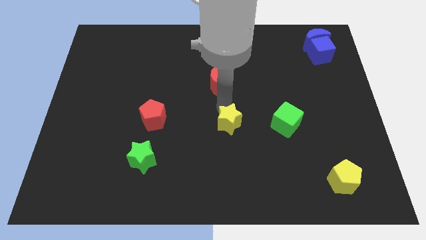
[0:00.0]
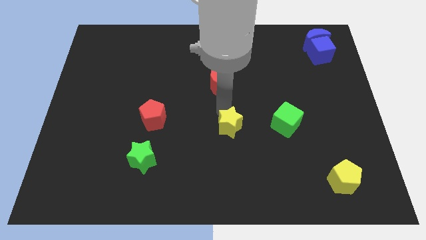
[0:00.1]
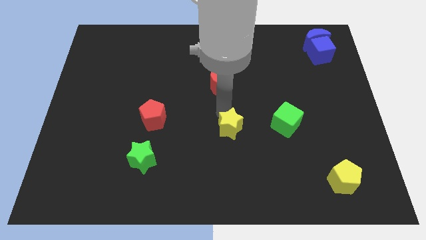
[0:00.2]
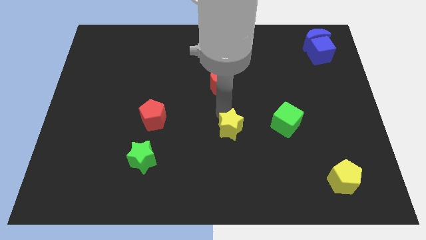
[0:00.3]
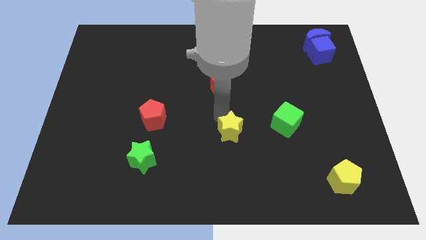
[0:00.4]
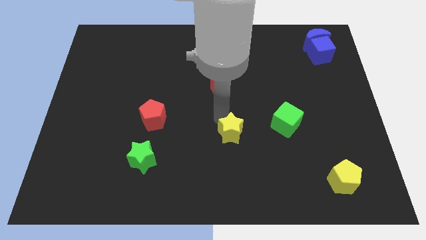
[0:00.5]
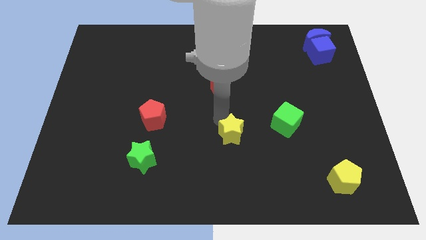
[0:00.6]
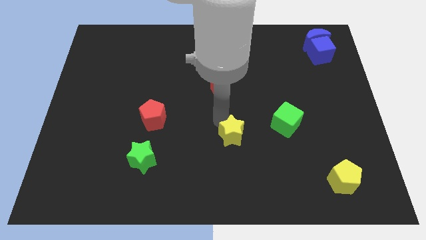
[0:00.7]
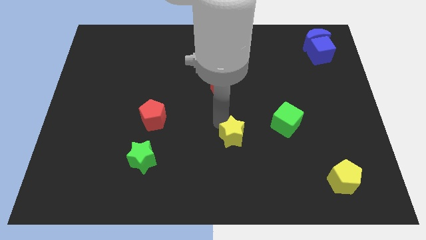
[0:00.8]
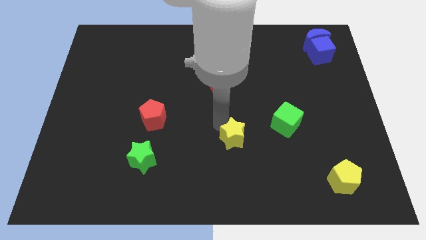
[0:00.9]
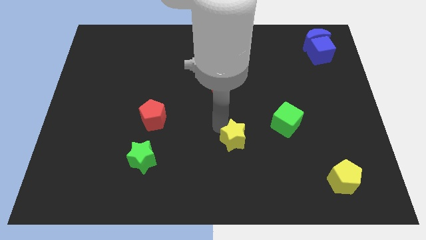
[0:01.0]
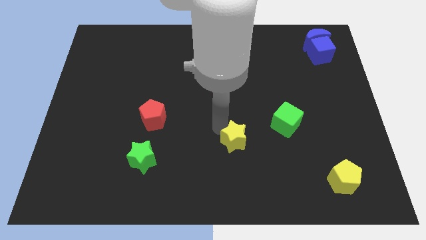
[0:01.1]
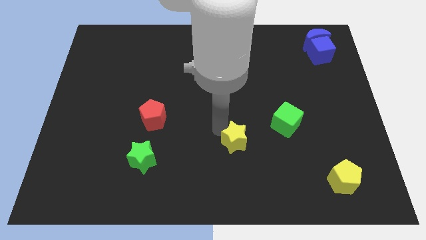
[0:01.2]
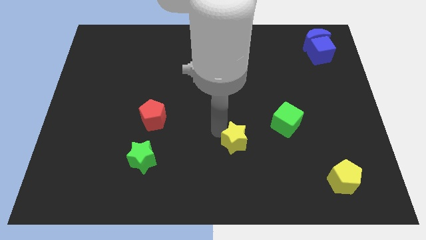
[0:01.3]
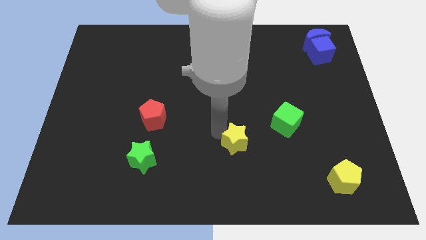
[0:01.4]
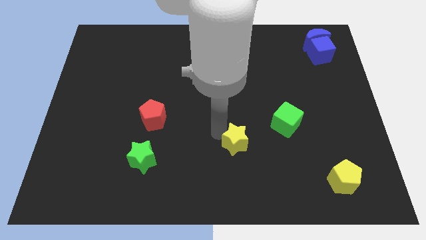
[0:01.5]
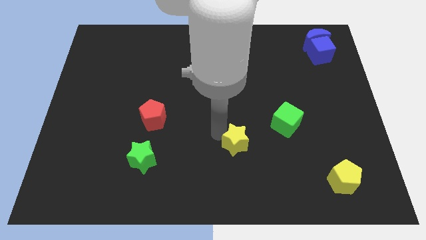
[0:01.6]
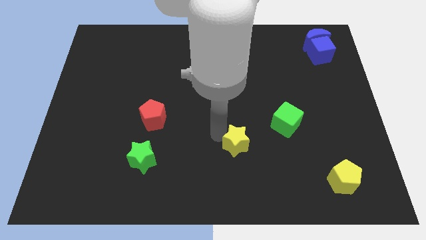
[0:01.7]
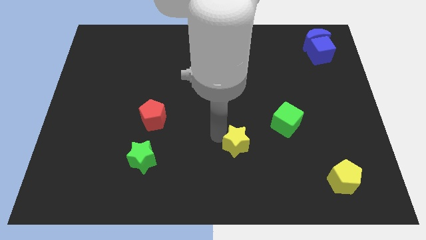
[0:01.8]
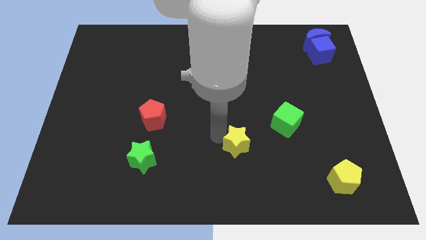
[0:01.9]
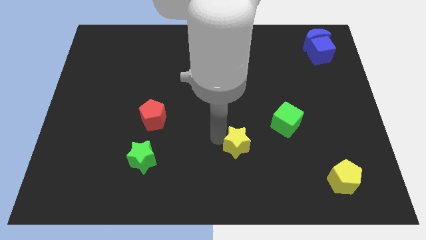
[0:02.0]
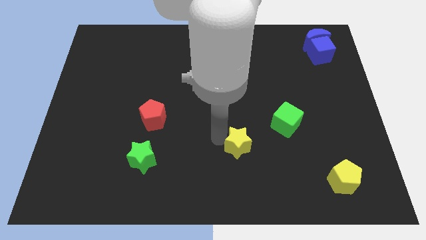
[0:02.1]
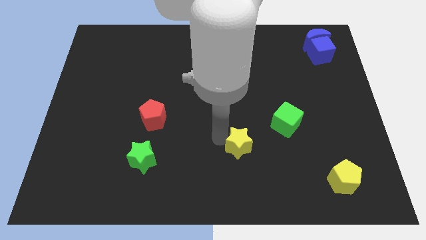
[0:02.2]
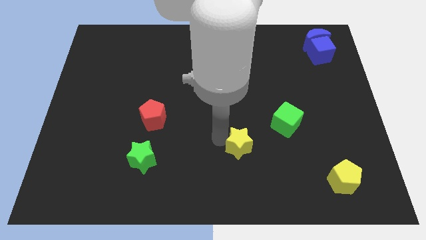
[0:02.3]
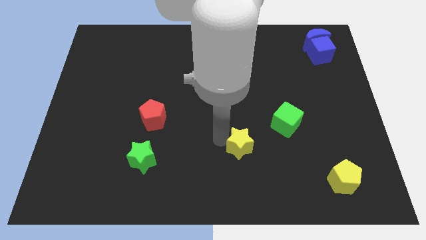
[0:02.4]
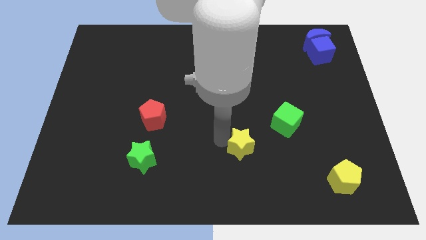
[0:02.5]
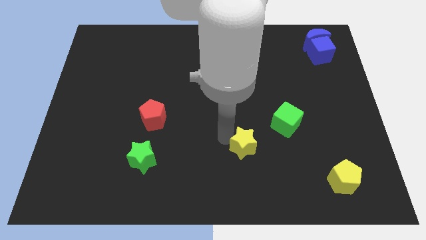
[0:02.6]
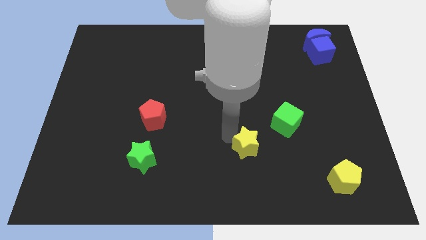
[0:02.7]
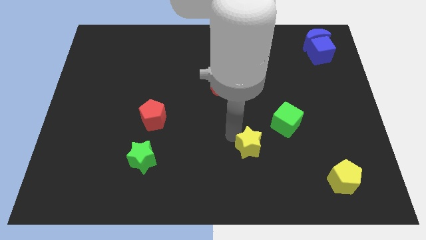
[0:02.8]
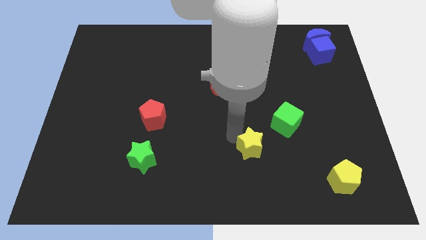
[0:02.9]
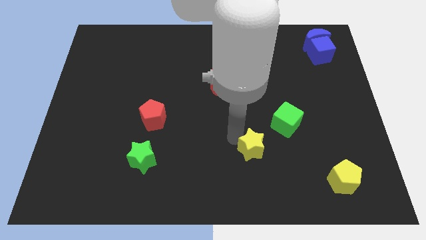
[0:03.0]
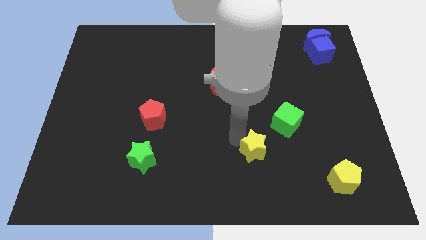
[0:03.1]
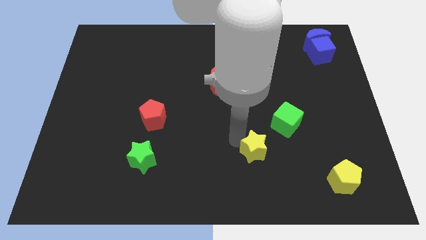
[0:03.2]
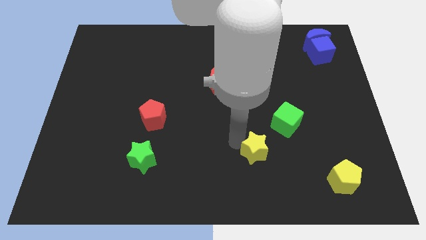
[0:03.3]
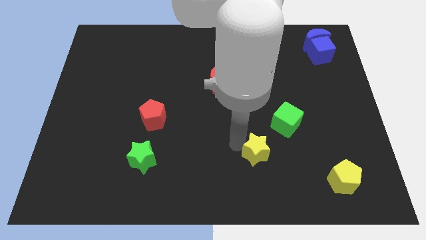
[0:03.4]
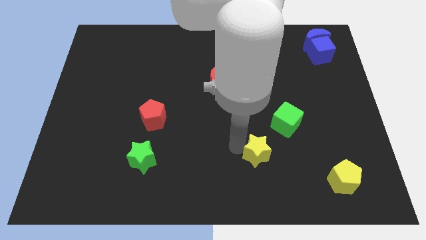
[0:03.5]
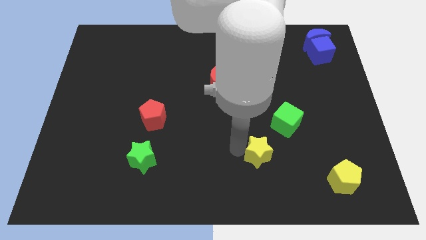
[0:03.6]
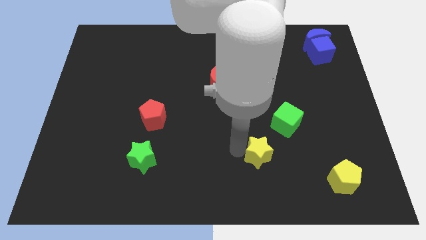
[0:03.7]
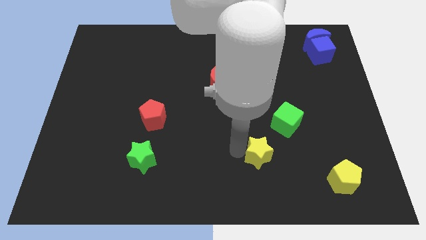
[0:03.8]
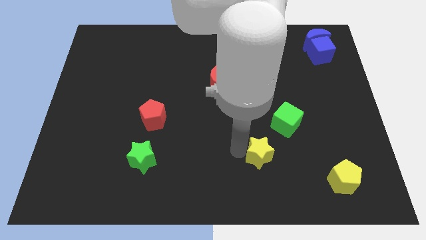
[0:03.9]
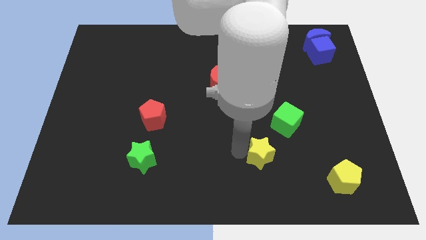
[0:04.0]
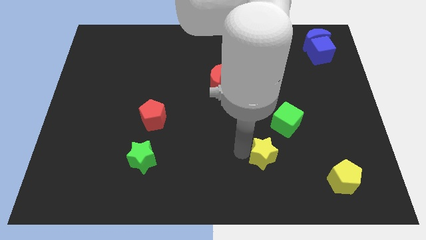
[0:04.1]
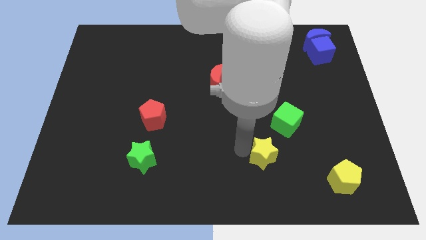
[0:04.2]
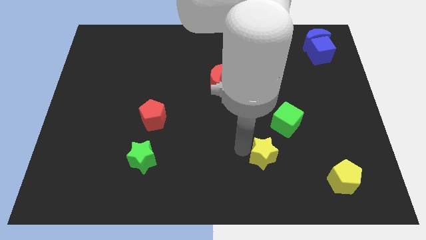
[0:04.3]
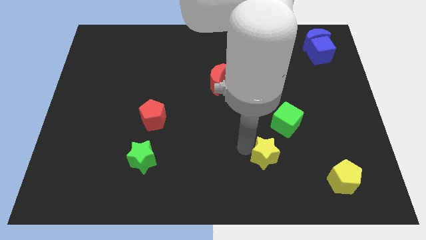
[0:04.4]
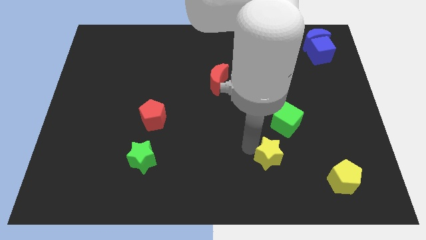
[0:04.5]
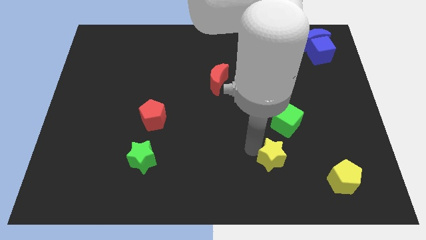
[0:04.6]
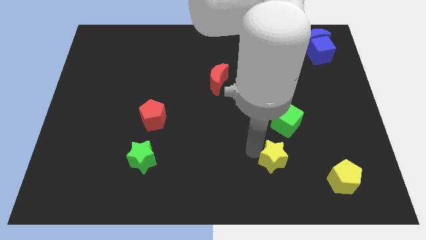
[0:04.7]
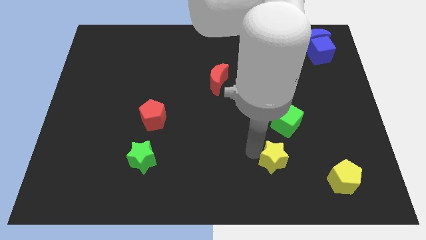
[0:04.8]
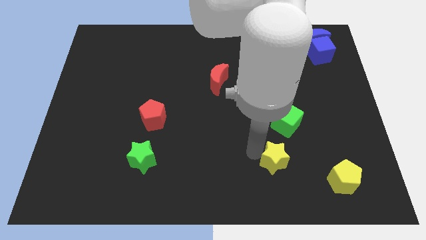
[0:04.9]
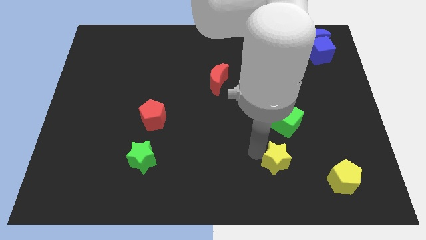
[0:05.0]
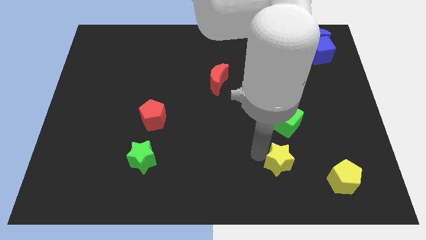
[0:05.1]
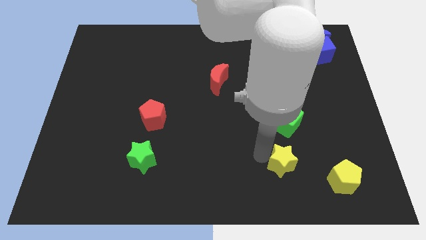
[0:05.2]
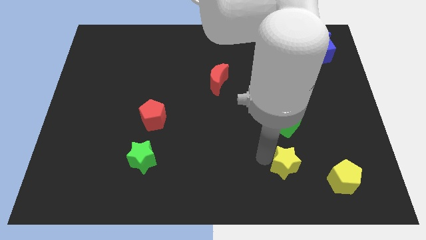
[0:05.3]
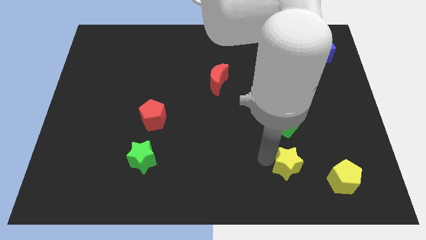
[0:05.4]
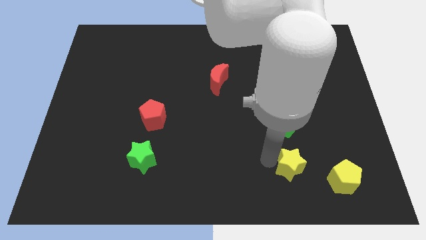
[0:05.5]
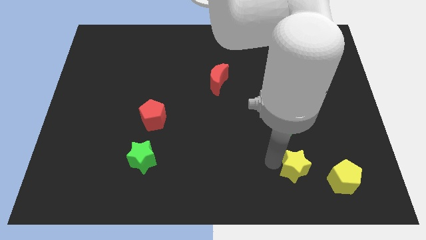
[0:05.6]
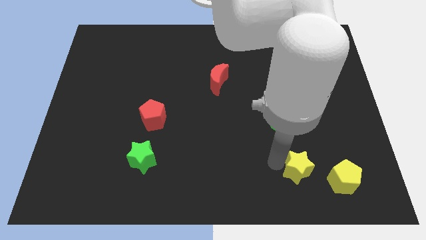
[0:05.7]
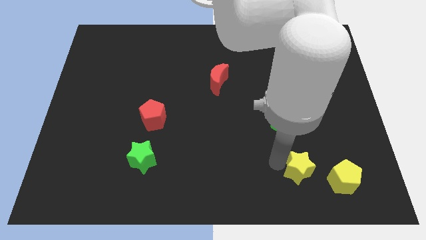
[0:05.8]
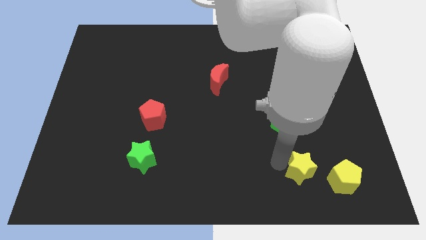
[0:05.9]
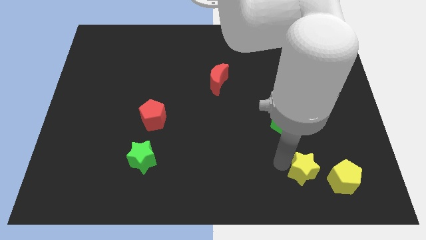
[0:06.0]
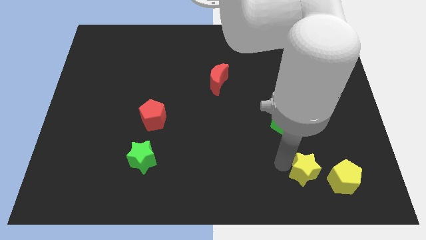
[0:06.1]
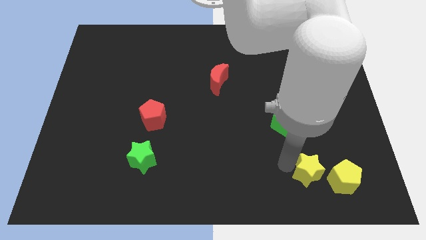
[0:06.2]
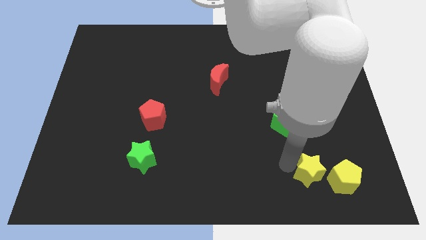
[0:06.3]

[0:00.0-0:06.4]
move the yellow star to the left of the yellow pentagon

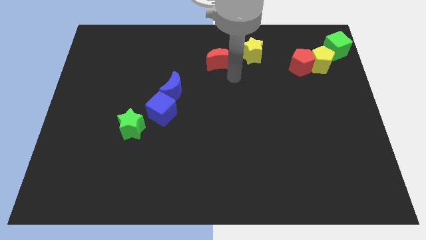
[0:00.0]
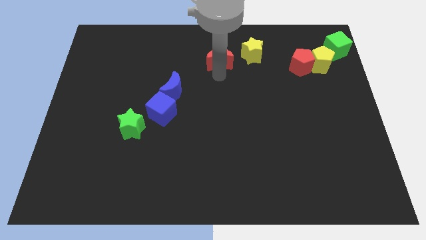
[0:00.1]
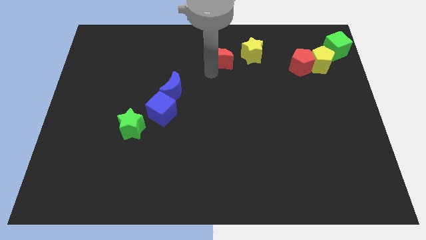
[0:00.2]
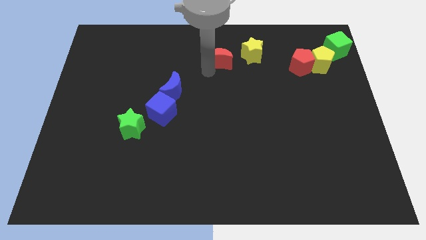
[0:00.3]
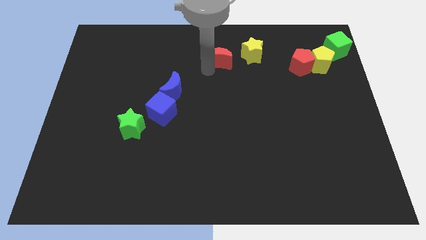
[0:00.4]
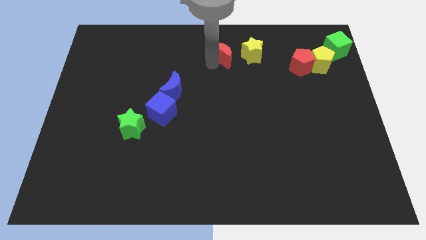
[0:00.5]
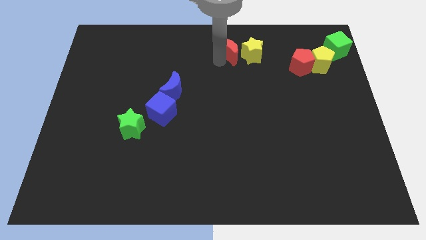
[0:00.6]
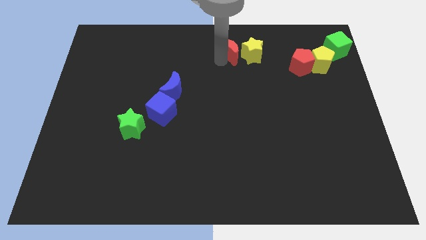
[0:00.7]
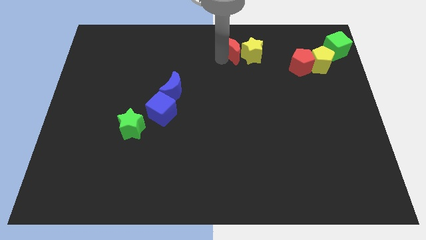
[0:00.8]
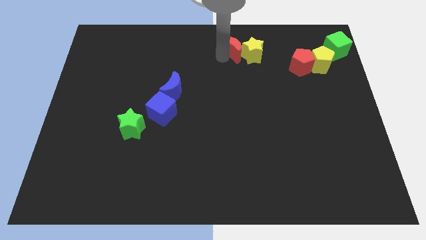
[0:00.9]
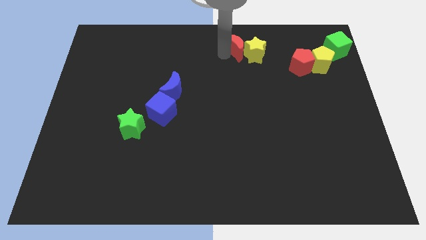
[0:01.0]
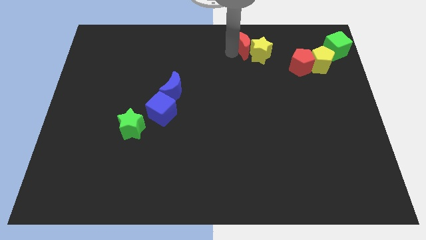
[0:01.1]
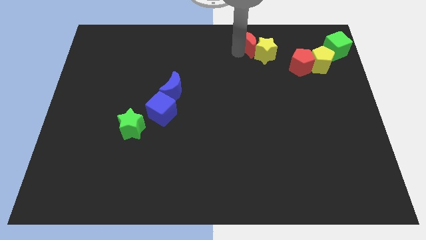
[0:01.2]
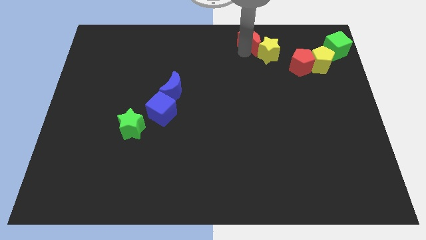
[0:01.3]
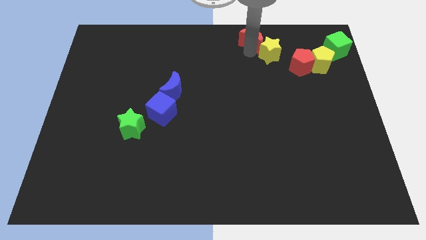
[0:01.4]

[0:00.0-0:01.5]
push the yellow star with the red moon

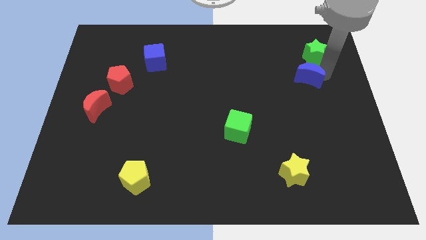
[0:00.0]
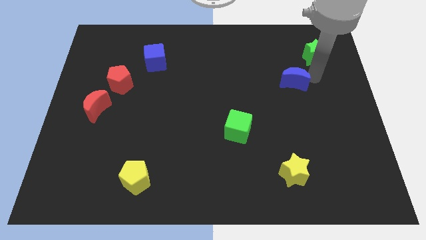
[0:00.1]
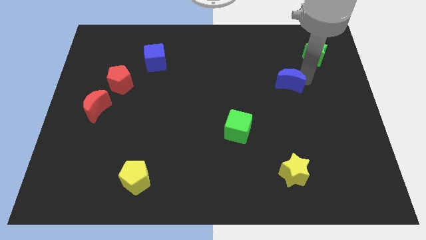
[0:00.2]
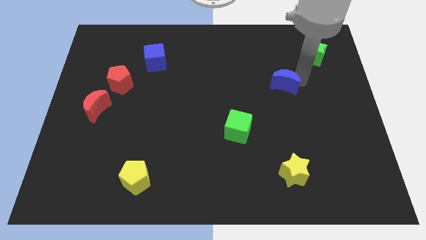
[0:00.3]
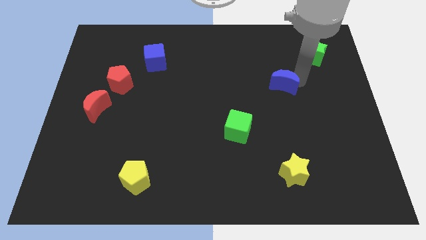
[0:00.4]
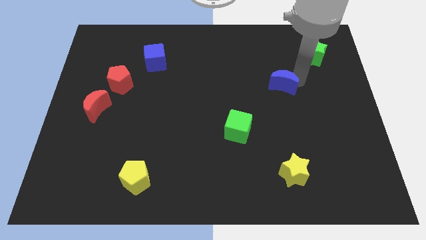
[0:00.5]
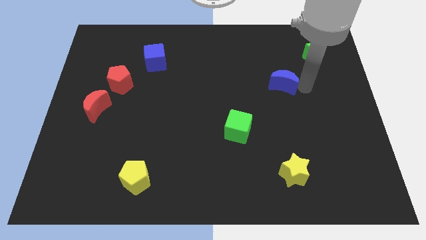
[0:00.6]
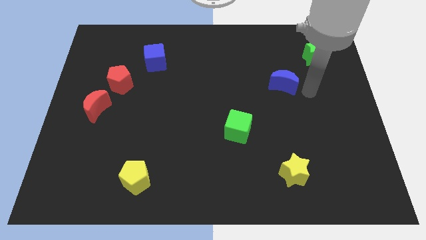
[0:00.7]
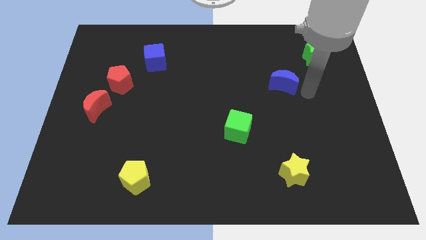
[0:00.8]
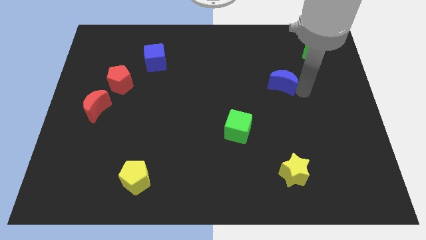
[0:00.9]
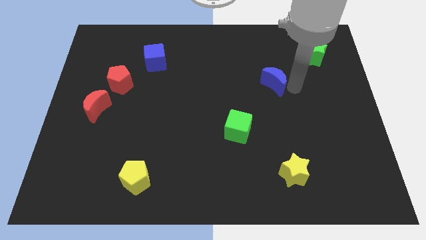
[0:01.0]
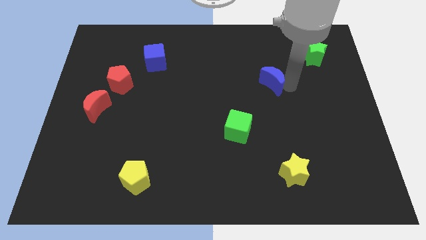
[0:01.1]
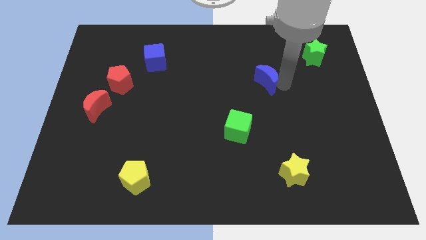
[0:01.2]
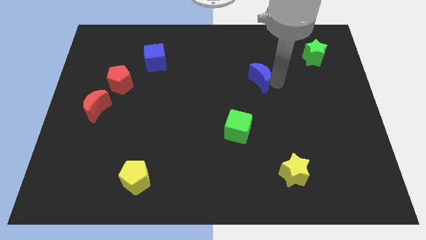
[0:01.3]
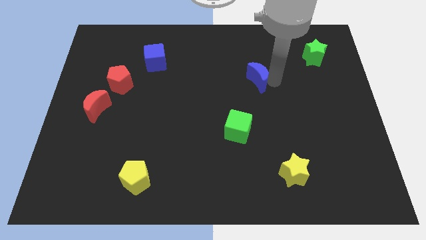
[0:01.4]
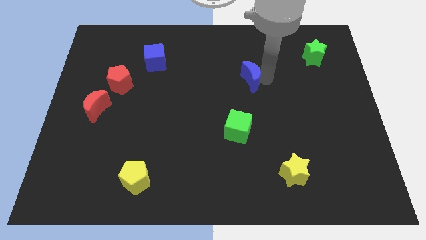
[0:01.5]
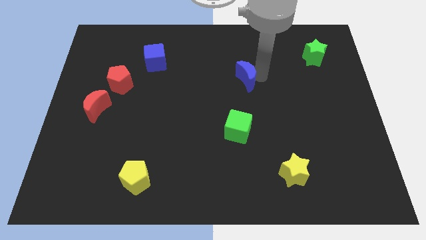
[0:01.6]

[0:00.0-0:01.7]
move blue moon apart from the green star
